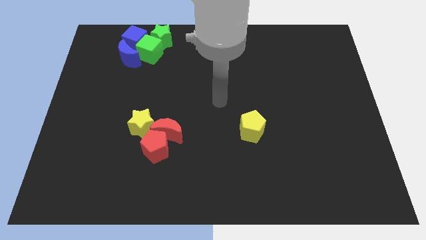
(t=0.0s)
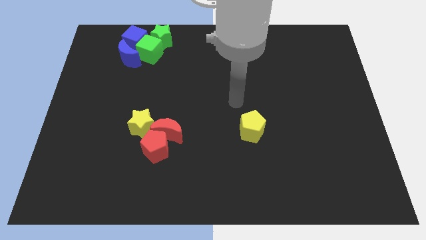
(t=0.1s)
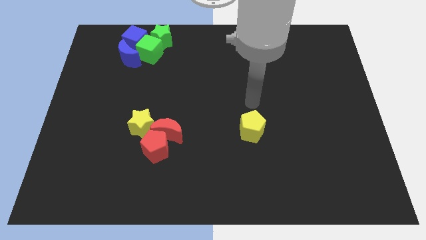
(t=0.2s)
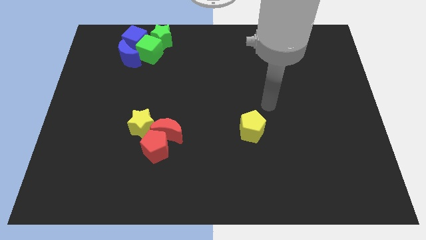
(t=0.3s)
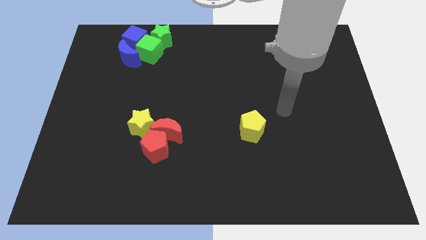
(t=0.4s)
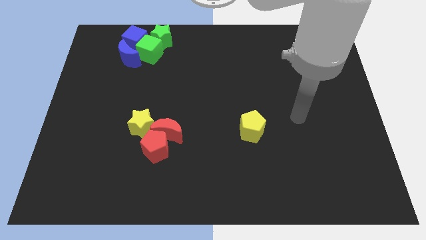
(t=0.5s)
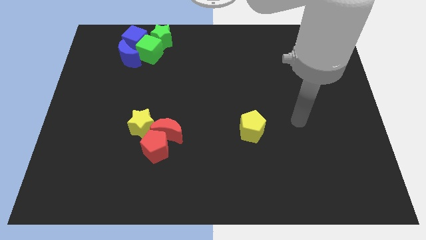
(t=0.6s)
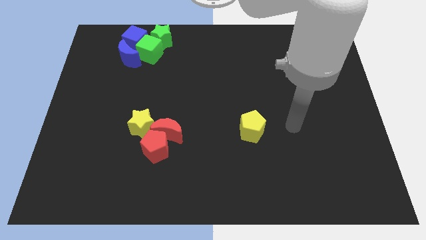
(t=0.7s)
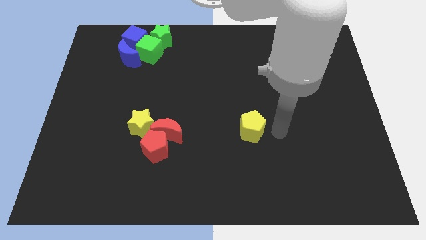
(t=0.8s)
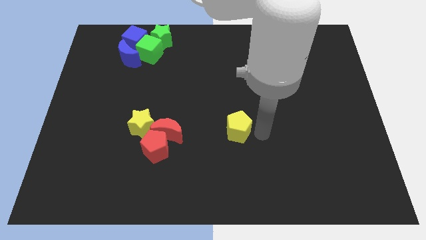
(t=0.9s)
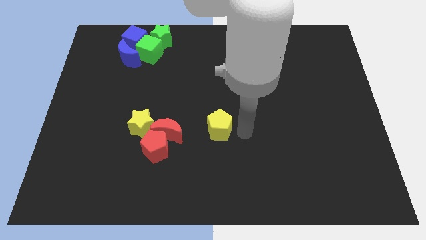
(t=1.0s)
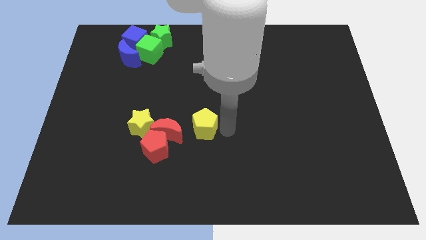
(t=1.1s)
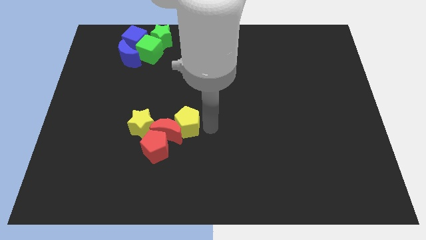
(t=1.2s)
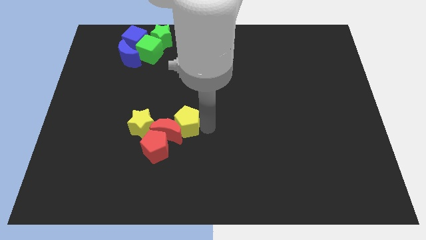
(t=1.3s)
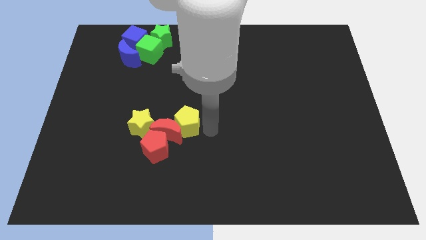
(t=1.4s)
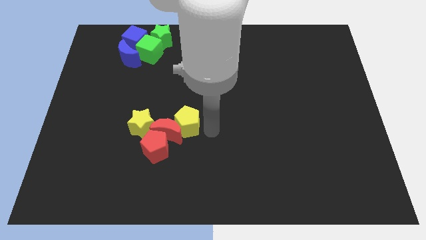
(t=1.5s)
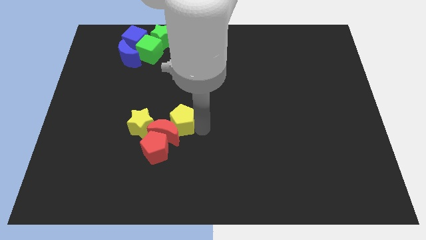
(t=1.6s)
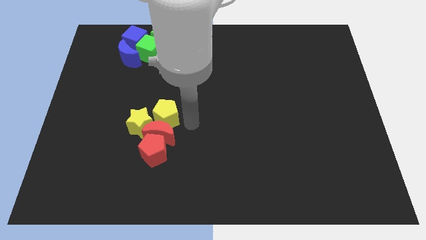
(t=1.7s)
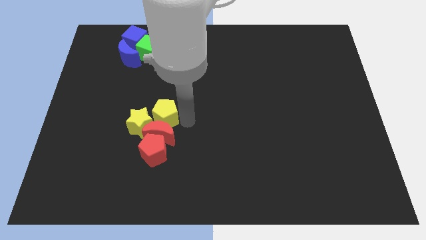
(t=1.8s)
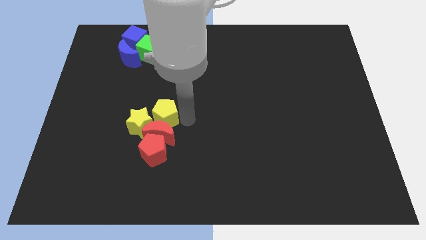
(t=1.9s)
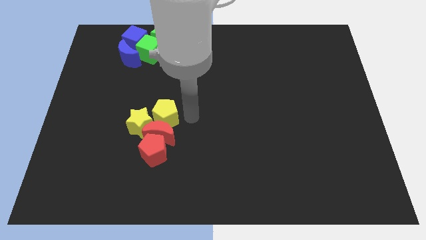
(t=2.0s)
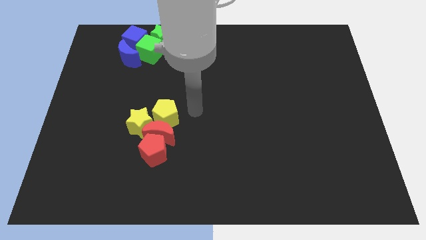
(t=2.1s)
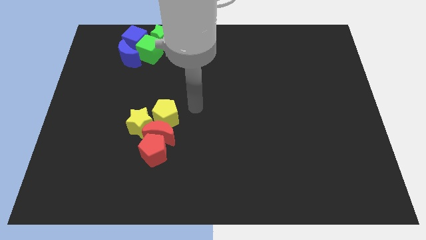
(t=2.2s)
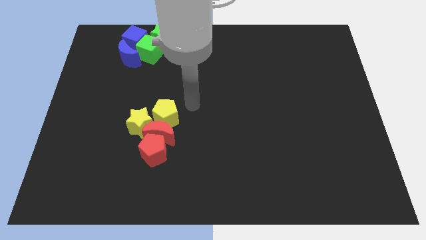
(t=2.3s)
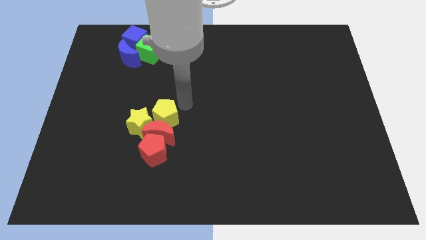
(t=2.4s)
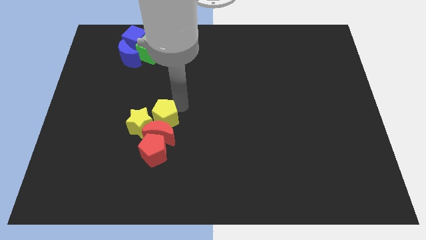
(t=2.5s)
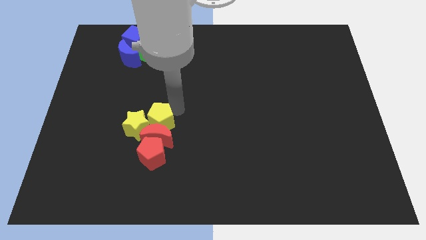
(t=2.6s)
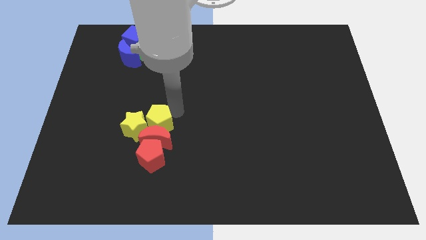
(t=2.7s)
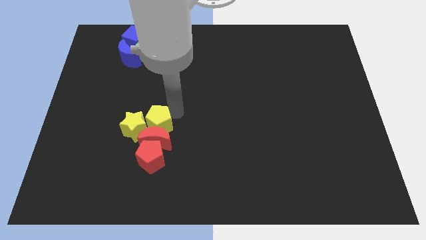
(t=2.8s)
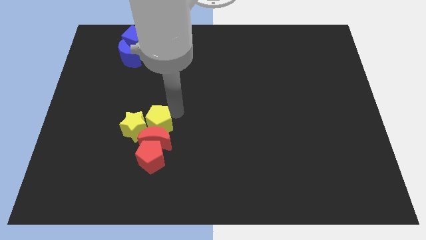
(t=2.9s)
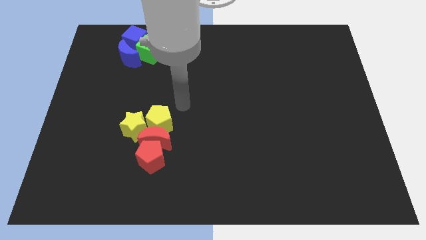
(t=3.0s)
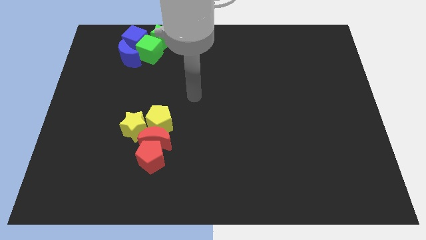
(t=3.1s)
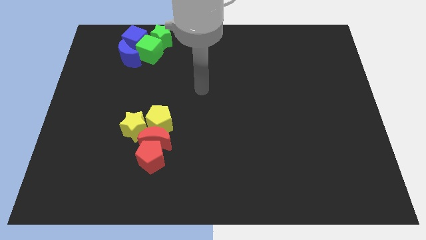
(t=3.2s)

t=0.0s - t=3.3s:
push the yellow pentagon into yellow star

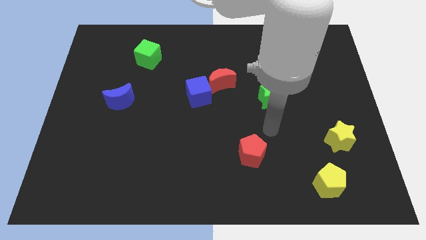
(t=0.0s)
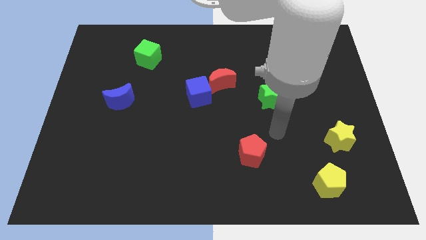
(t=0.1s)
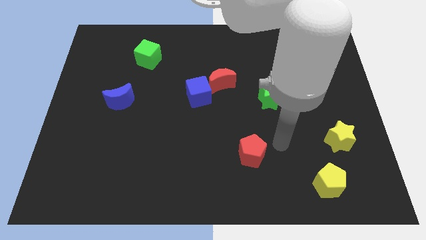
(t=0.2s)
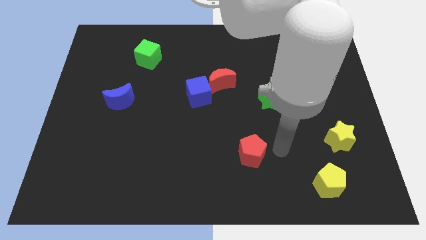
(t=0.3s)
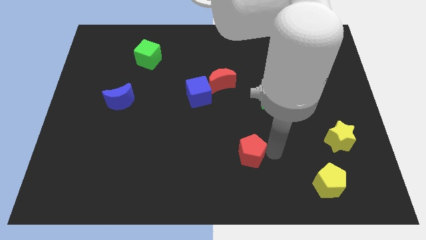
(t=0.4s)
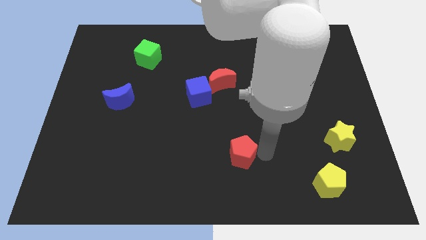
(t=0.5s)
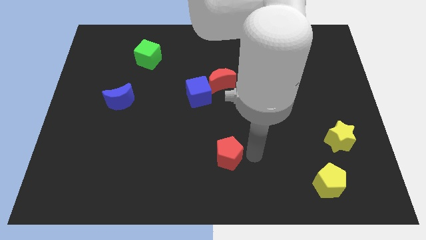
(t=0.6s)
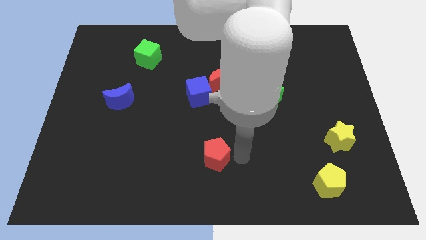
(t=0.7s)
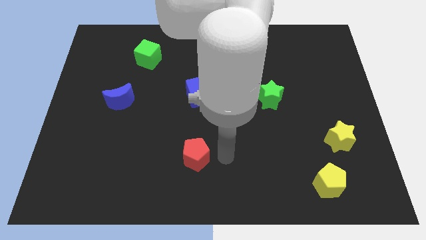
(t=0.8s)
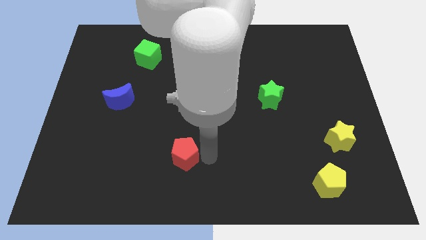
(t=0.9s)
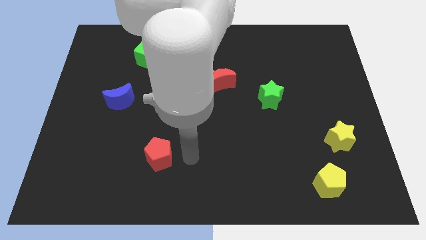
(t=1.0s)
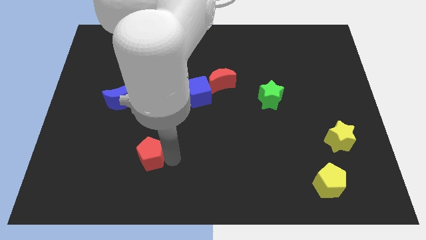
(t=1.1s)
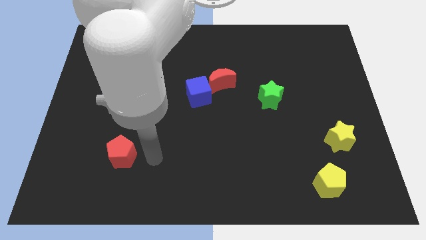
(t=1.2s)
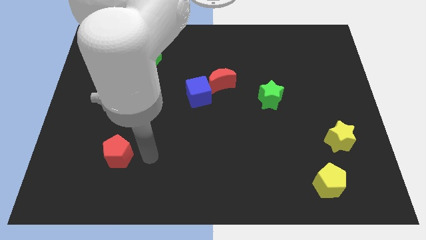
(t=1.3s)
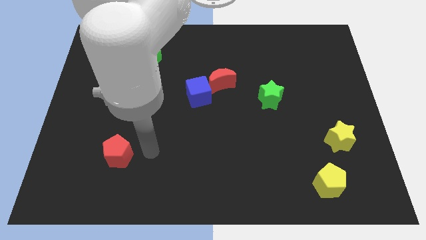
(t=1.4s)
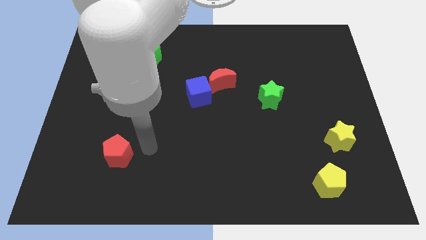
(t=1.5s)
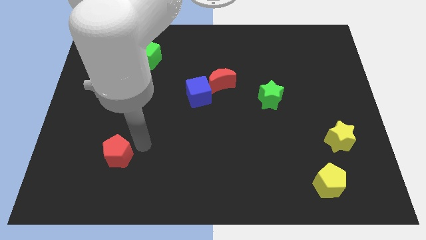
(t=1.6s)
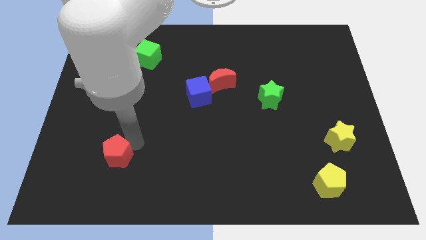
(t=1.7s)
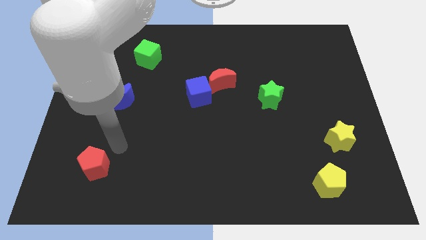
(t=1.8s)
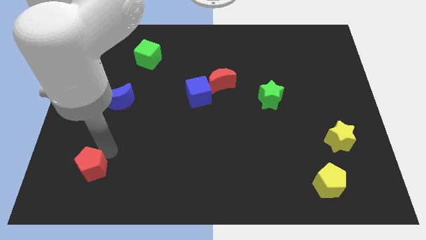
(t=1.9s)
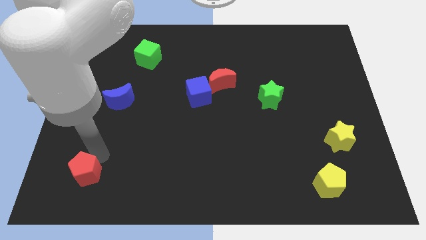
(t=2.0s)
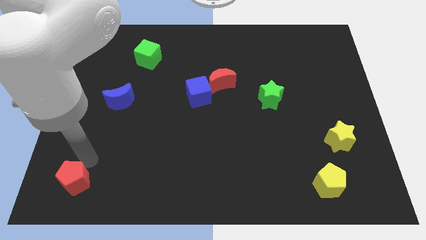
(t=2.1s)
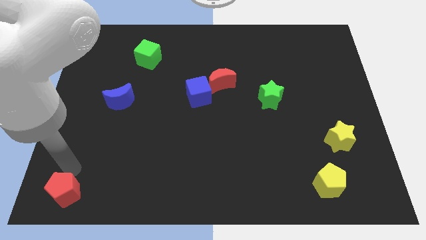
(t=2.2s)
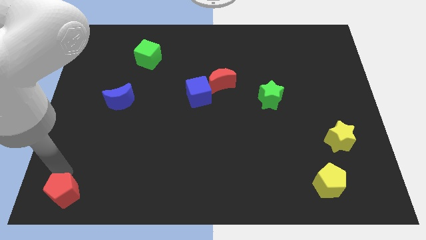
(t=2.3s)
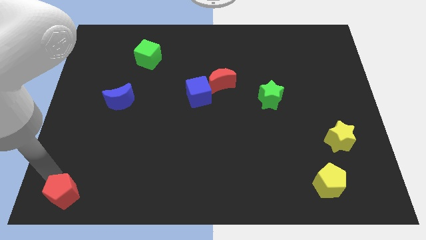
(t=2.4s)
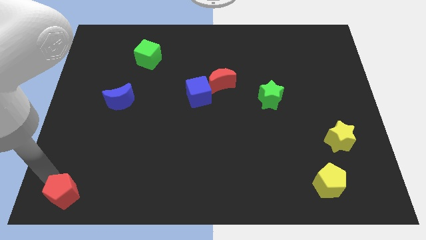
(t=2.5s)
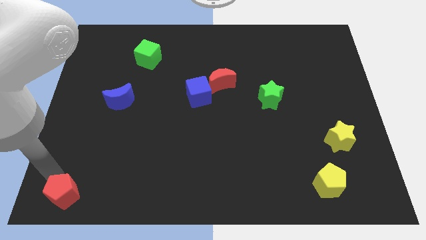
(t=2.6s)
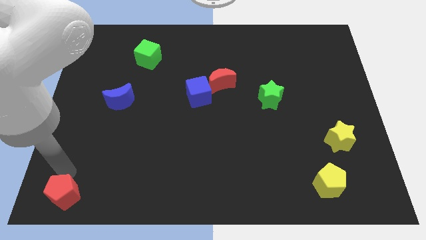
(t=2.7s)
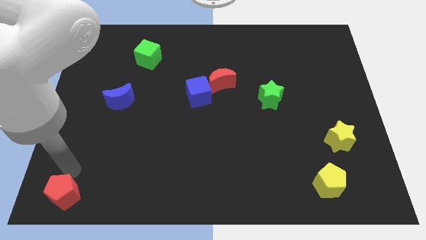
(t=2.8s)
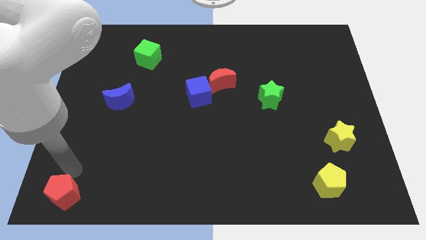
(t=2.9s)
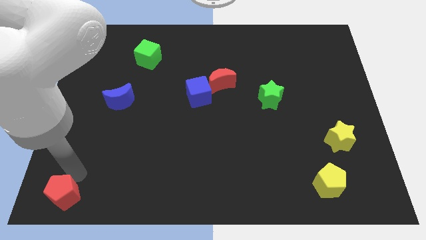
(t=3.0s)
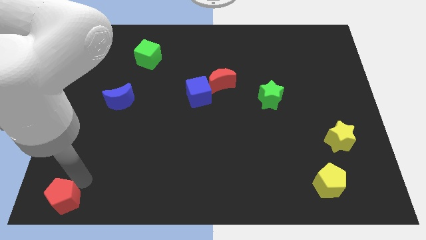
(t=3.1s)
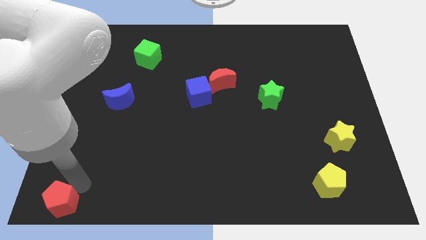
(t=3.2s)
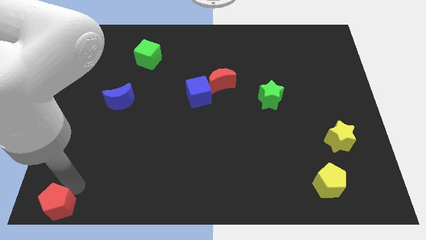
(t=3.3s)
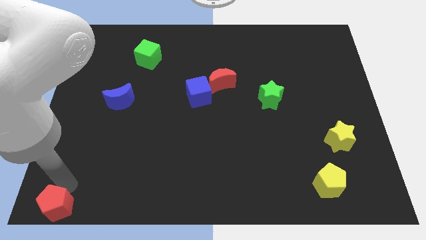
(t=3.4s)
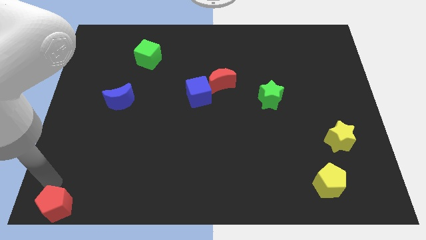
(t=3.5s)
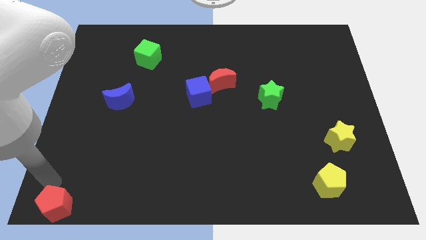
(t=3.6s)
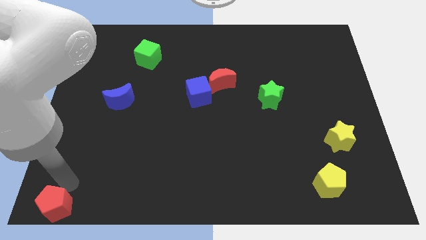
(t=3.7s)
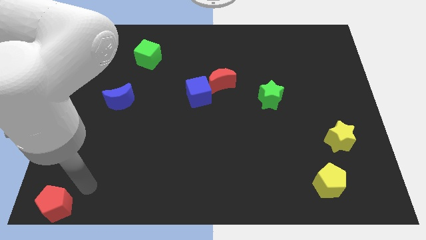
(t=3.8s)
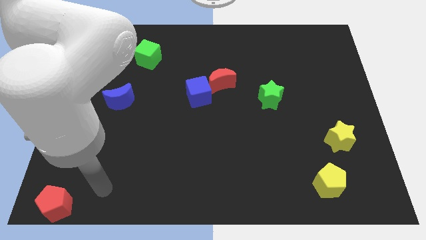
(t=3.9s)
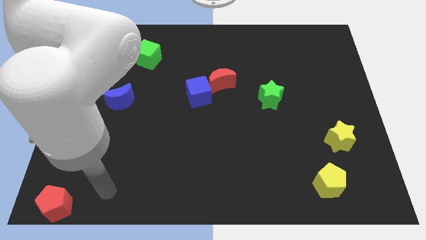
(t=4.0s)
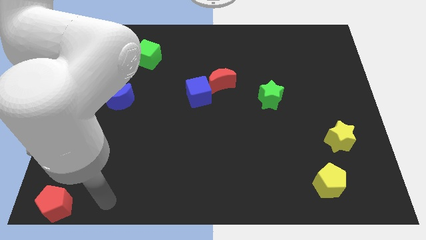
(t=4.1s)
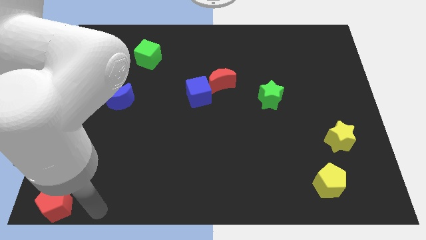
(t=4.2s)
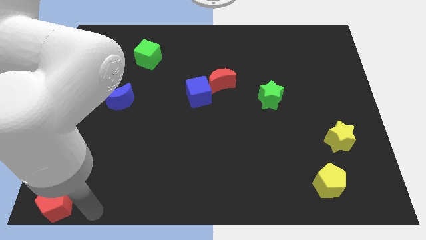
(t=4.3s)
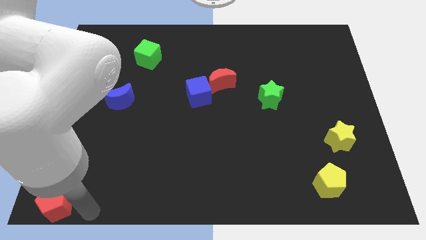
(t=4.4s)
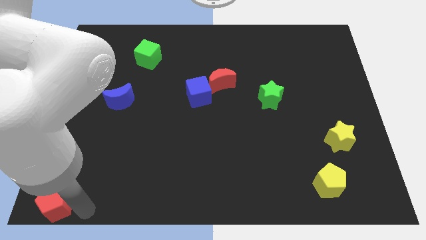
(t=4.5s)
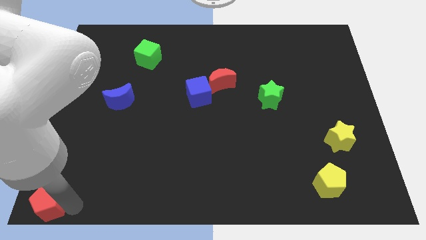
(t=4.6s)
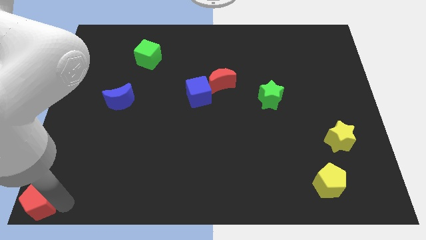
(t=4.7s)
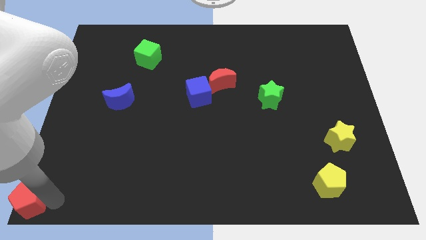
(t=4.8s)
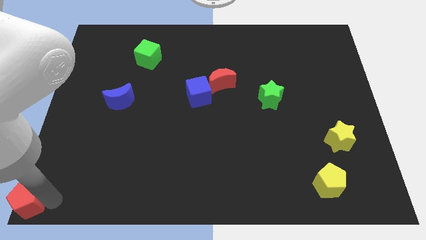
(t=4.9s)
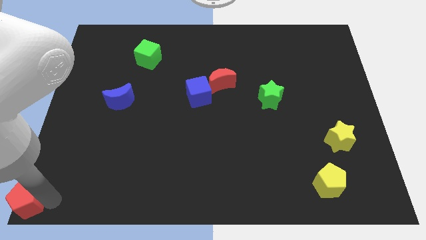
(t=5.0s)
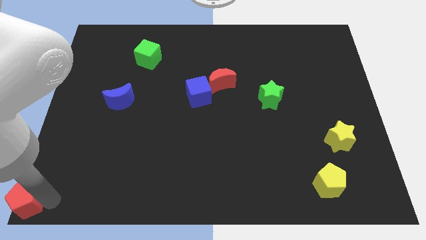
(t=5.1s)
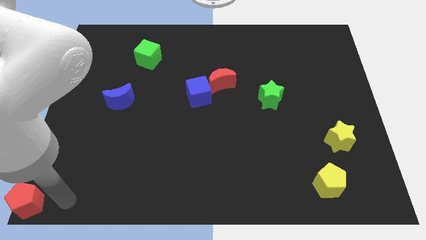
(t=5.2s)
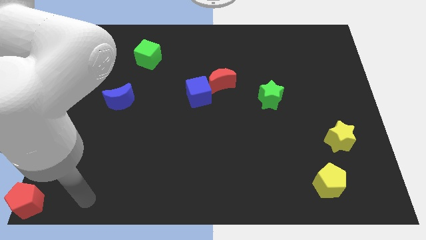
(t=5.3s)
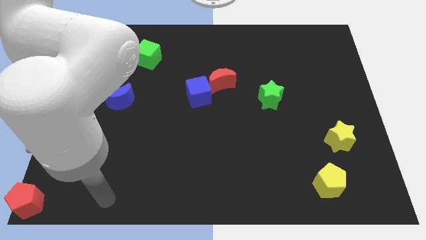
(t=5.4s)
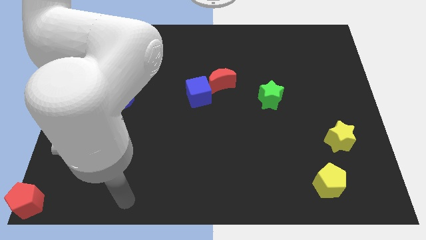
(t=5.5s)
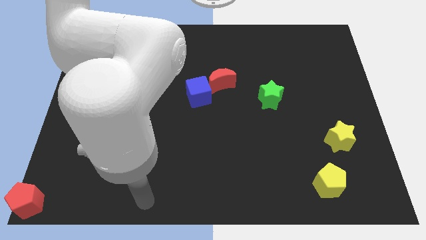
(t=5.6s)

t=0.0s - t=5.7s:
push the red pentagon to the bottom left corner
